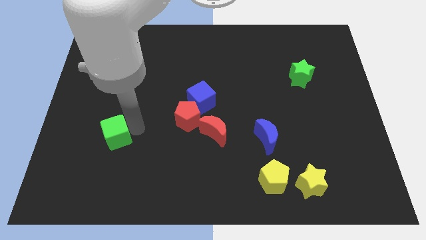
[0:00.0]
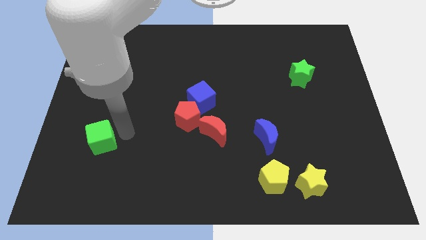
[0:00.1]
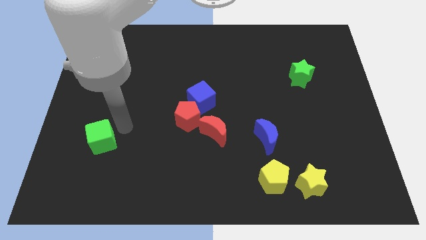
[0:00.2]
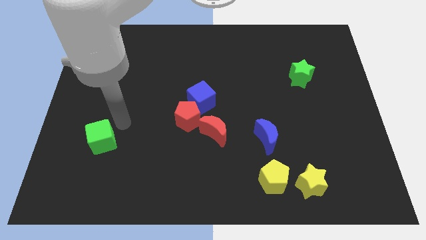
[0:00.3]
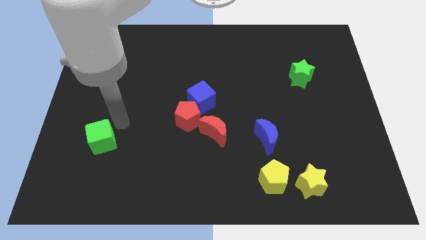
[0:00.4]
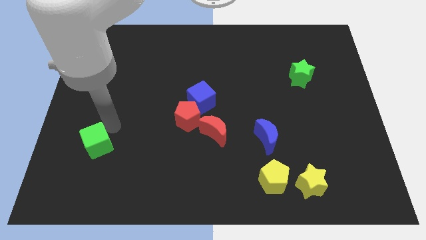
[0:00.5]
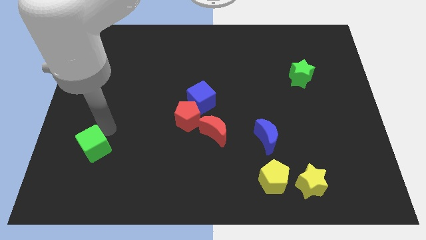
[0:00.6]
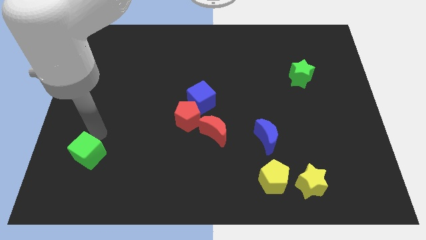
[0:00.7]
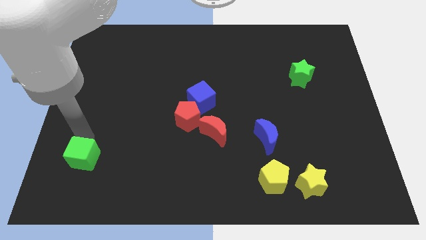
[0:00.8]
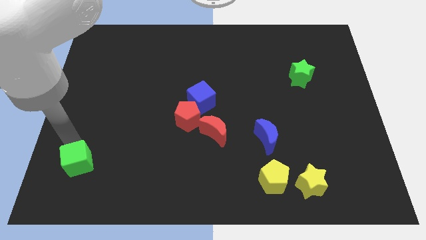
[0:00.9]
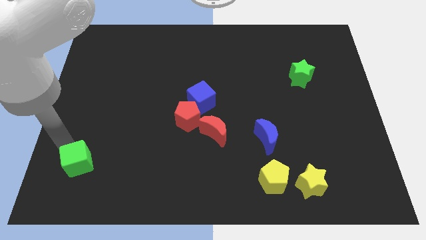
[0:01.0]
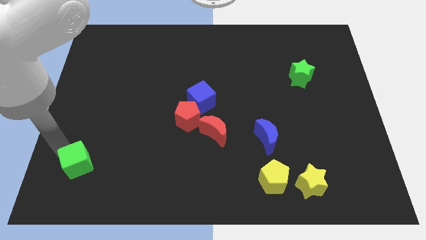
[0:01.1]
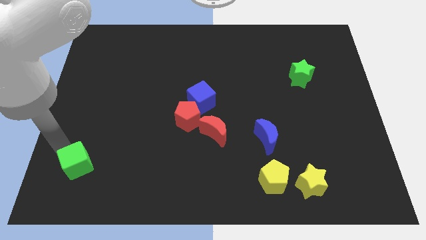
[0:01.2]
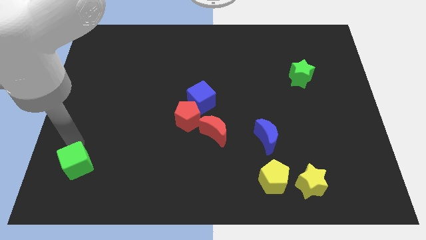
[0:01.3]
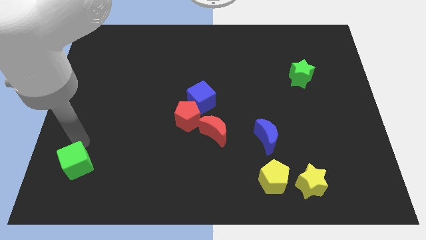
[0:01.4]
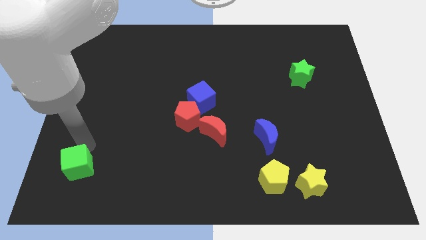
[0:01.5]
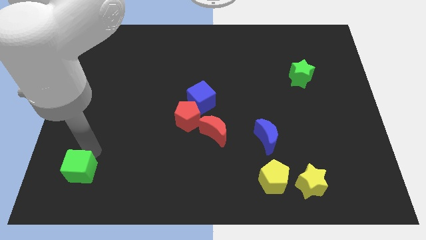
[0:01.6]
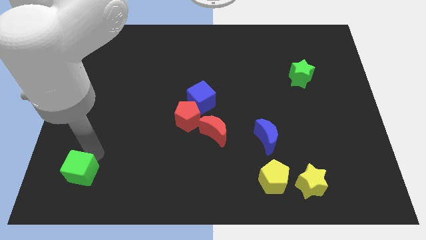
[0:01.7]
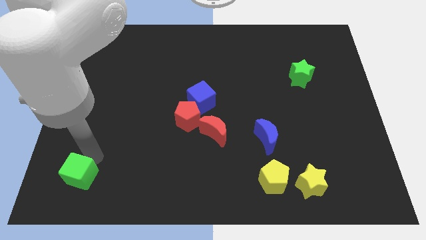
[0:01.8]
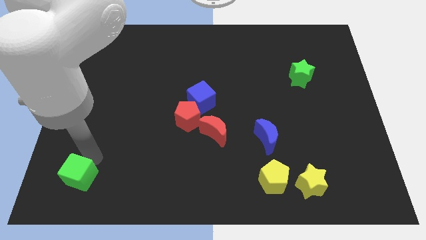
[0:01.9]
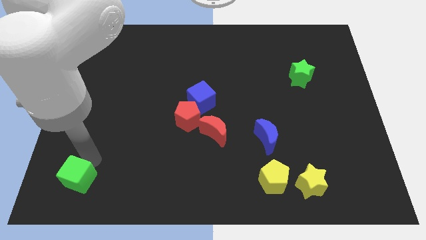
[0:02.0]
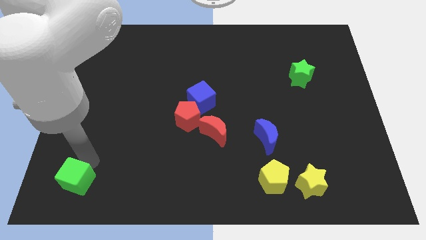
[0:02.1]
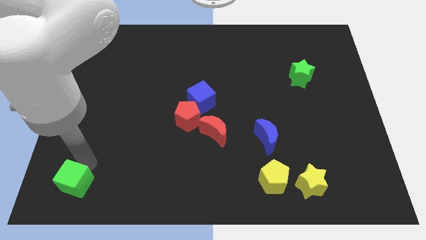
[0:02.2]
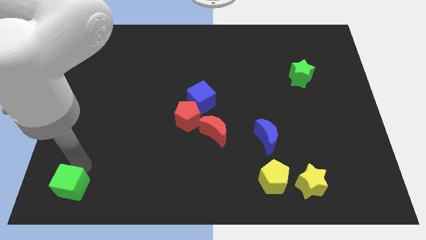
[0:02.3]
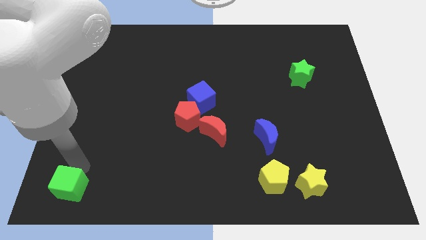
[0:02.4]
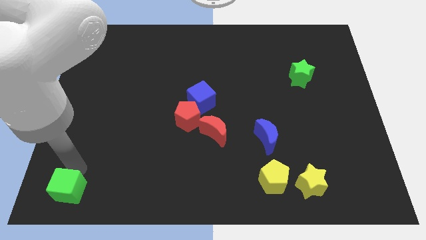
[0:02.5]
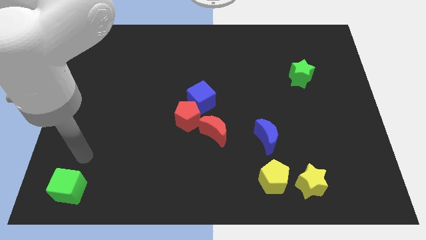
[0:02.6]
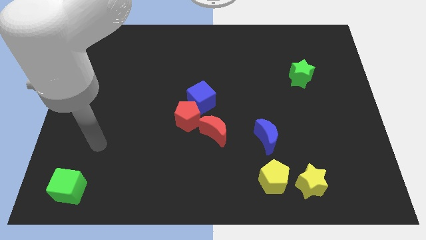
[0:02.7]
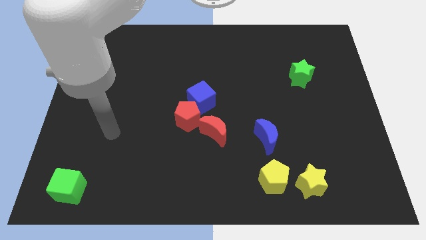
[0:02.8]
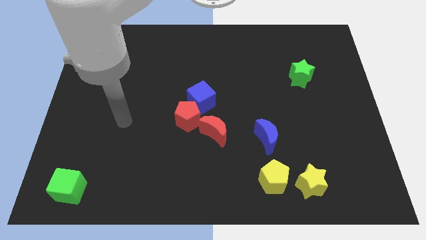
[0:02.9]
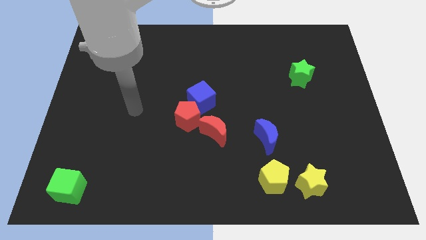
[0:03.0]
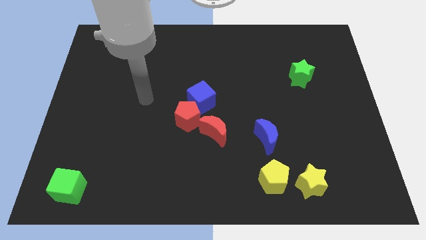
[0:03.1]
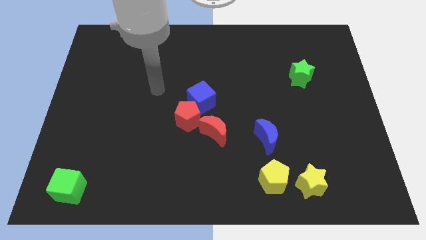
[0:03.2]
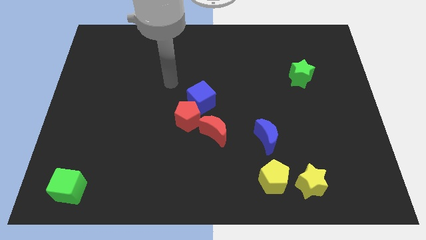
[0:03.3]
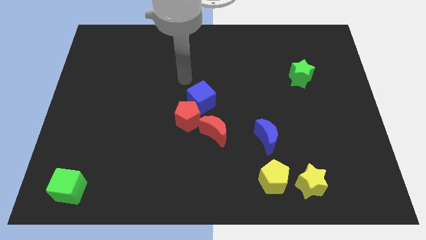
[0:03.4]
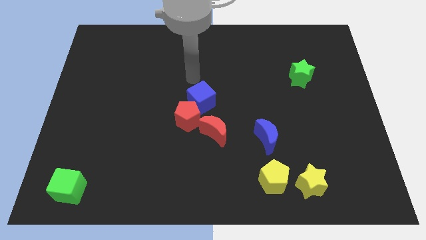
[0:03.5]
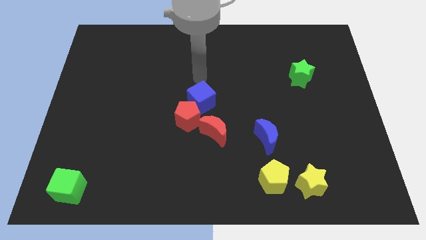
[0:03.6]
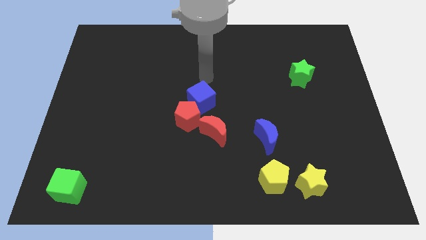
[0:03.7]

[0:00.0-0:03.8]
slide the green cube towards left corner bottom of the board

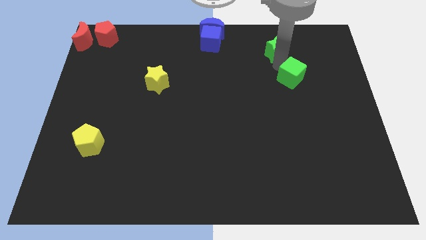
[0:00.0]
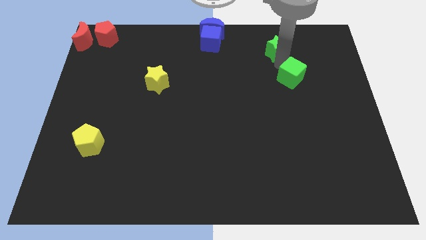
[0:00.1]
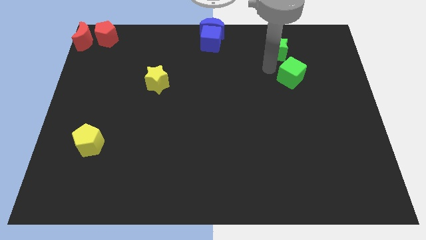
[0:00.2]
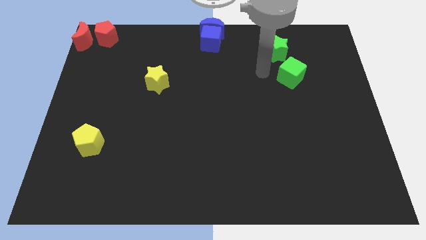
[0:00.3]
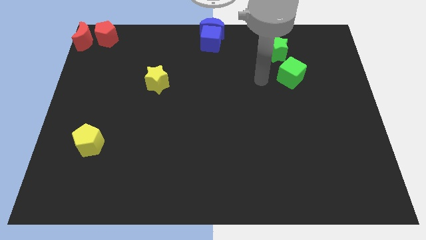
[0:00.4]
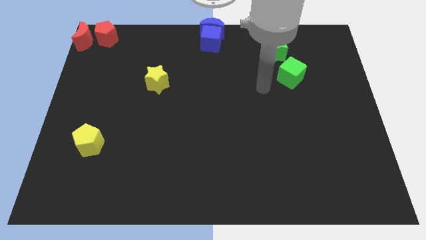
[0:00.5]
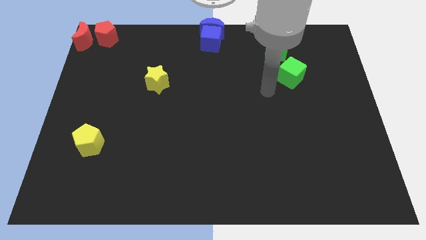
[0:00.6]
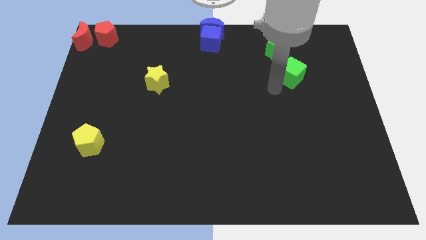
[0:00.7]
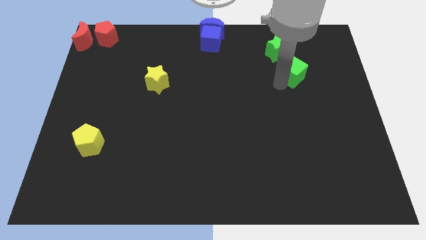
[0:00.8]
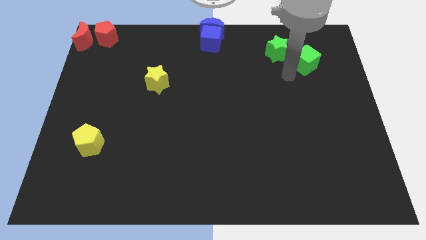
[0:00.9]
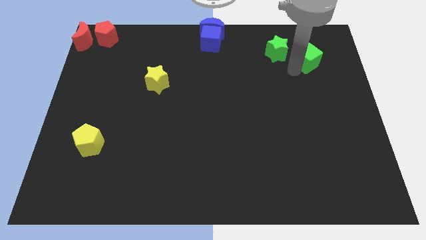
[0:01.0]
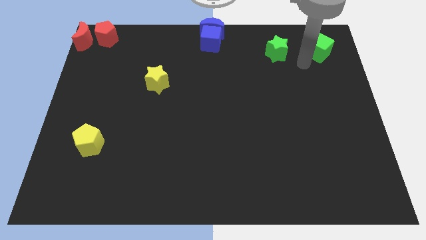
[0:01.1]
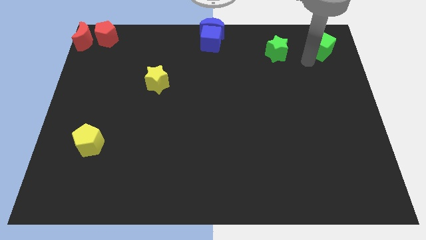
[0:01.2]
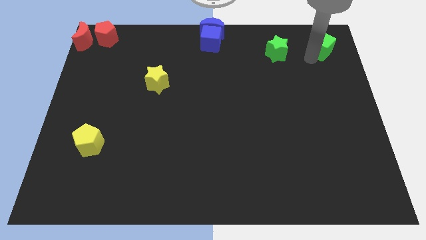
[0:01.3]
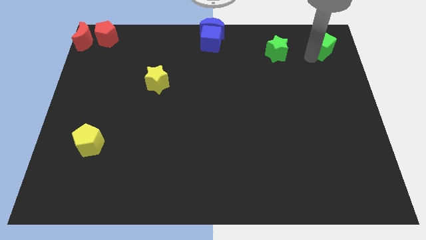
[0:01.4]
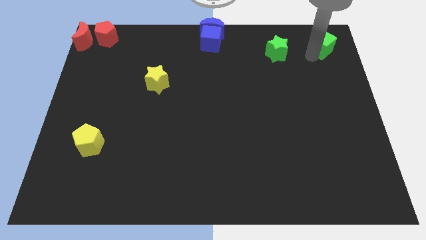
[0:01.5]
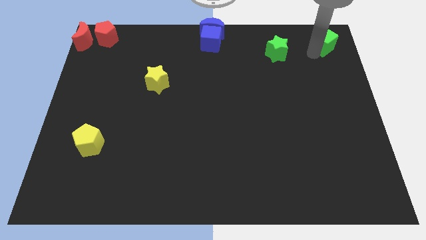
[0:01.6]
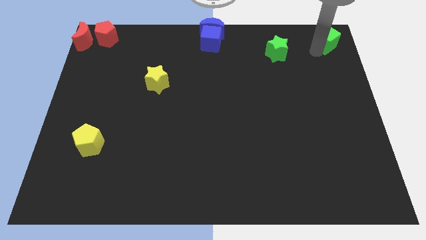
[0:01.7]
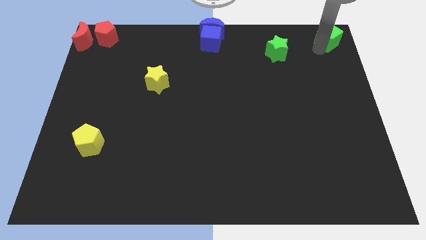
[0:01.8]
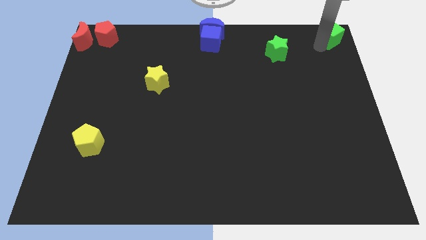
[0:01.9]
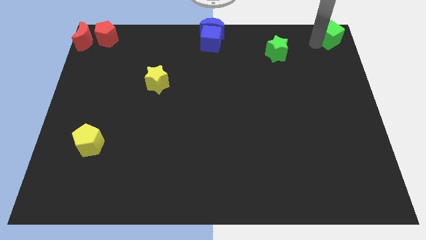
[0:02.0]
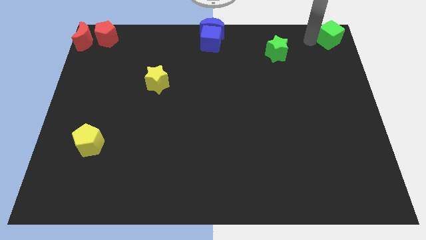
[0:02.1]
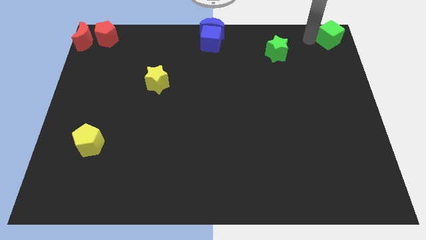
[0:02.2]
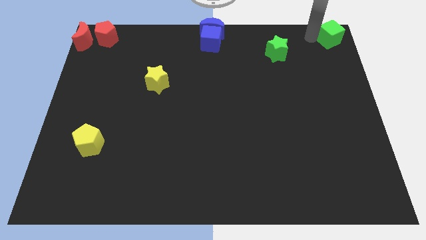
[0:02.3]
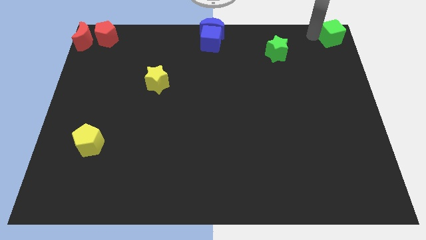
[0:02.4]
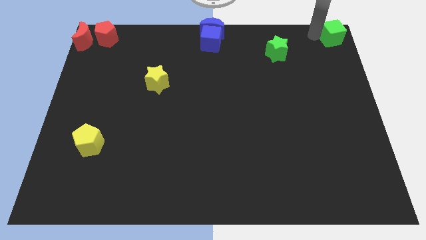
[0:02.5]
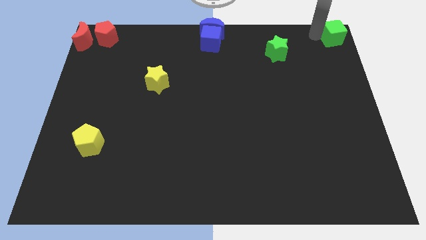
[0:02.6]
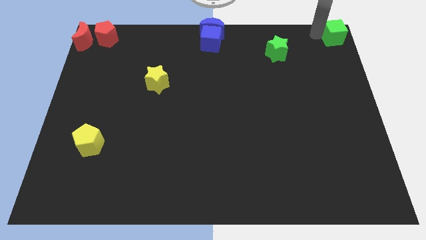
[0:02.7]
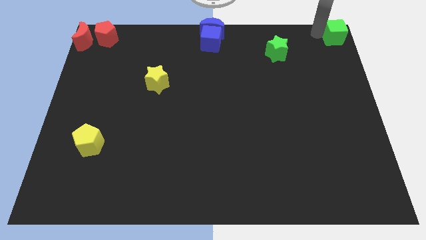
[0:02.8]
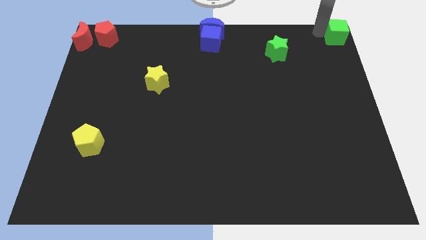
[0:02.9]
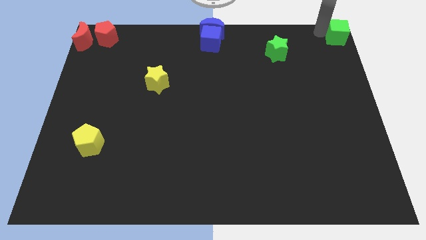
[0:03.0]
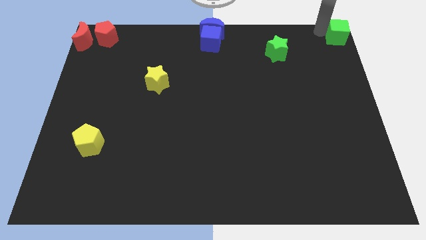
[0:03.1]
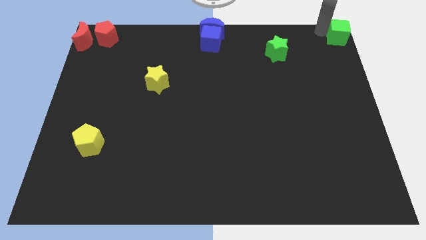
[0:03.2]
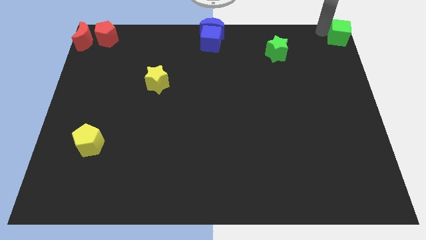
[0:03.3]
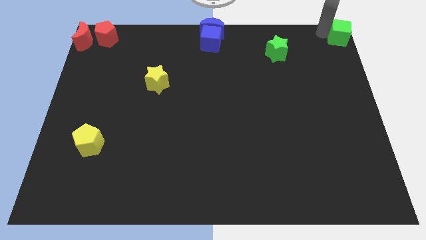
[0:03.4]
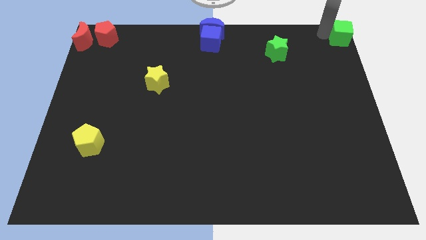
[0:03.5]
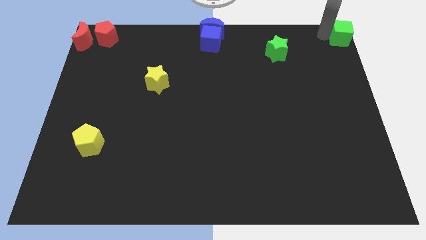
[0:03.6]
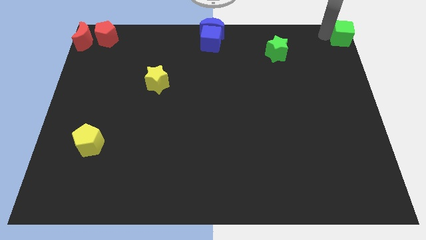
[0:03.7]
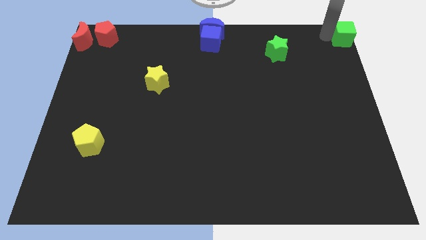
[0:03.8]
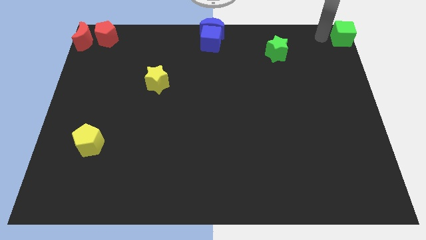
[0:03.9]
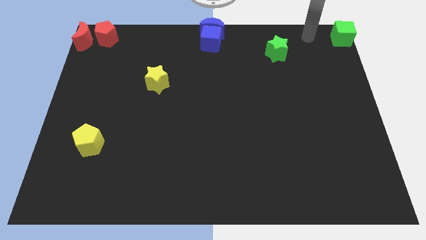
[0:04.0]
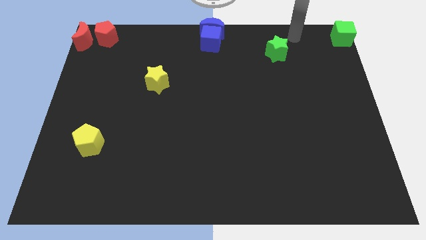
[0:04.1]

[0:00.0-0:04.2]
push the green cube to the top right of the board

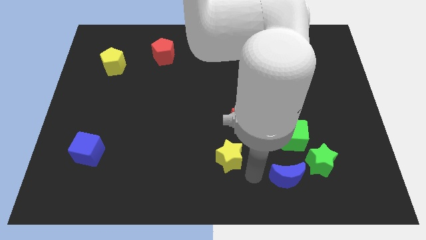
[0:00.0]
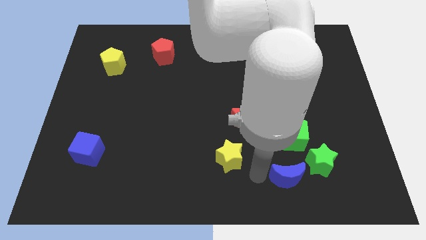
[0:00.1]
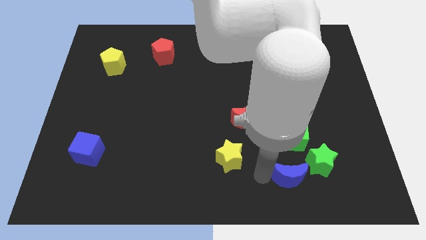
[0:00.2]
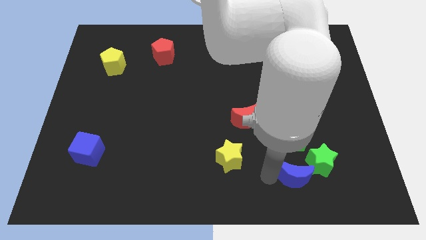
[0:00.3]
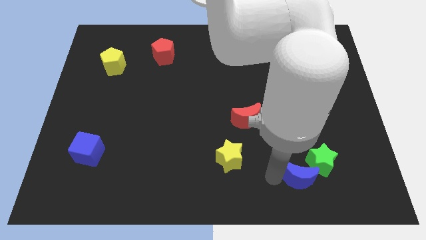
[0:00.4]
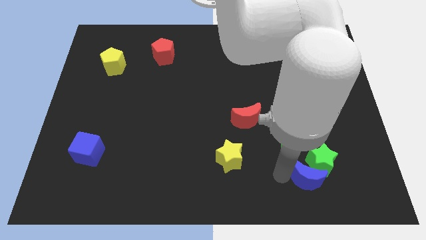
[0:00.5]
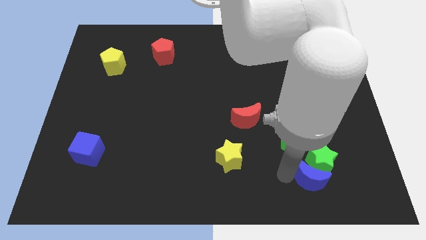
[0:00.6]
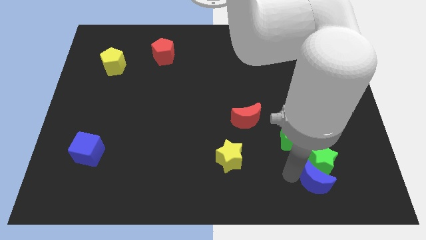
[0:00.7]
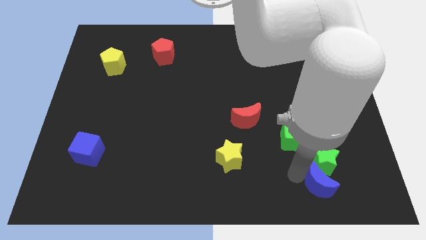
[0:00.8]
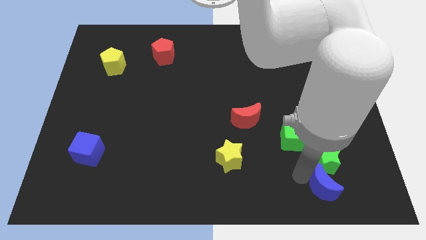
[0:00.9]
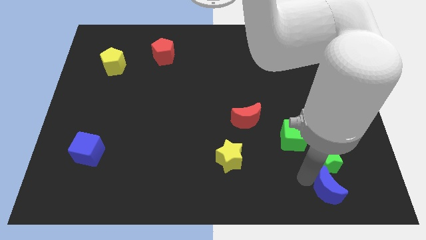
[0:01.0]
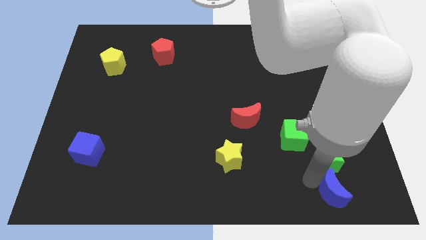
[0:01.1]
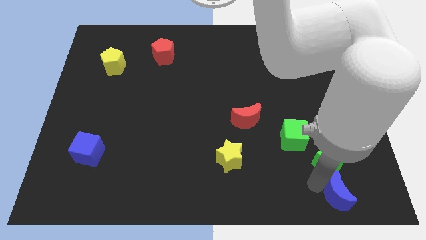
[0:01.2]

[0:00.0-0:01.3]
push the blue crescent to the bottom of the green star
